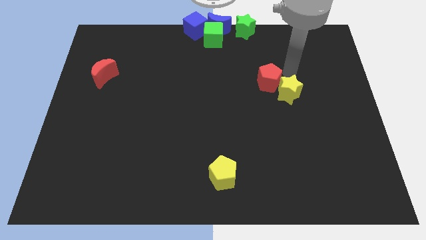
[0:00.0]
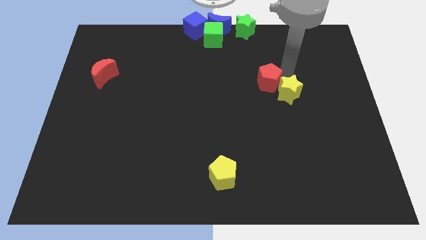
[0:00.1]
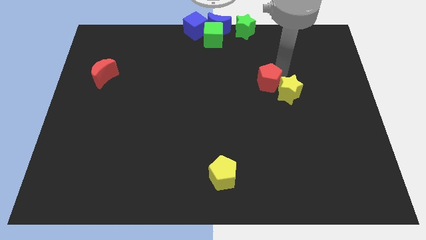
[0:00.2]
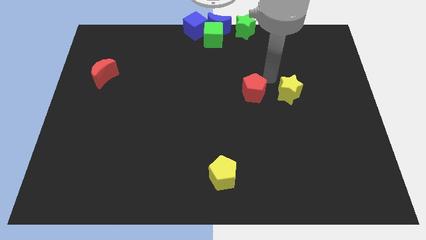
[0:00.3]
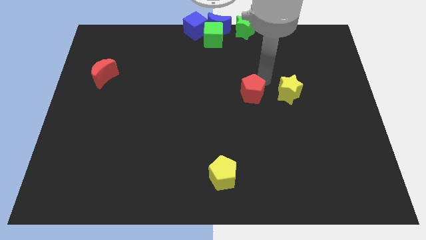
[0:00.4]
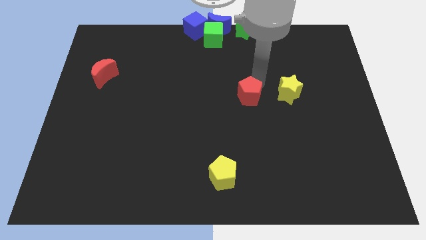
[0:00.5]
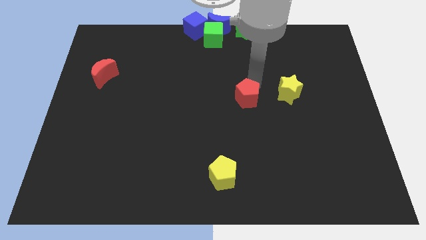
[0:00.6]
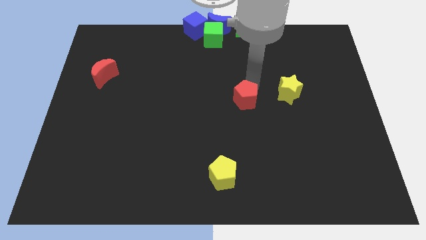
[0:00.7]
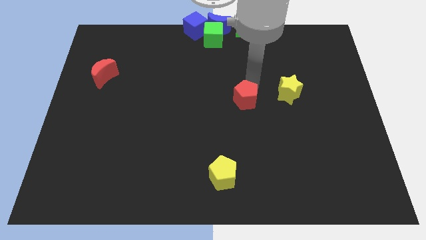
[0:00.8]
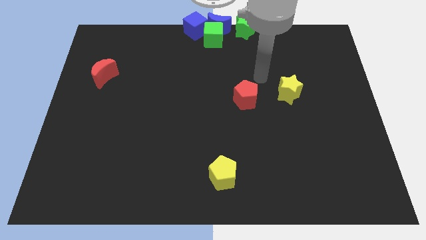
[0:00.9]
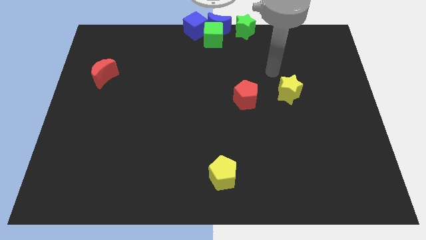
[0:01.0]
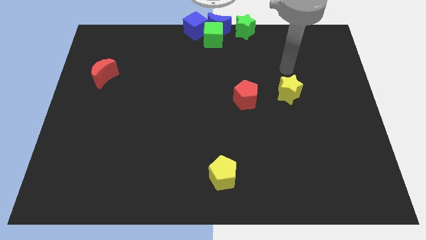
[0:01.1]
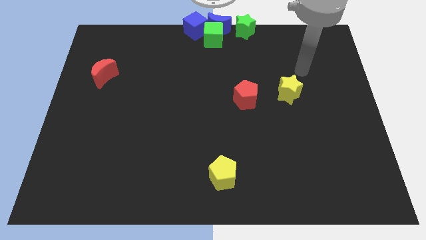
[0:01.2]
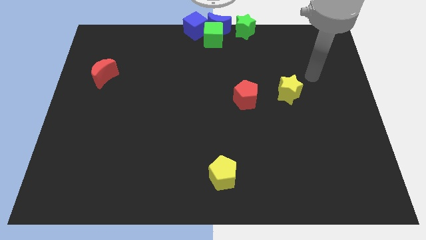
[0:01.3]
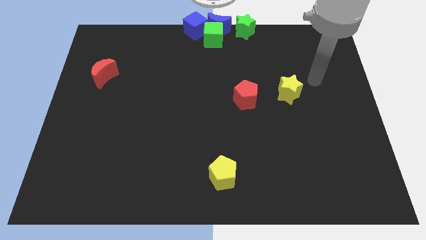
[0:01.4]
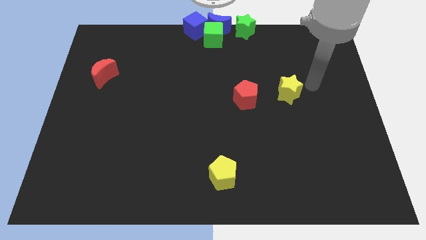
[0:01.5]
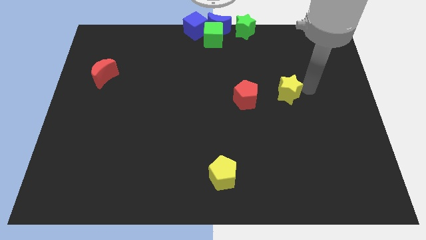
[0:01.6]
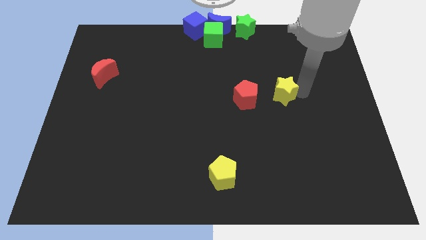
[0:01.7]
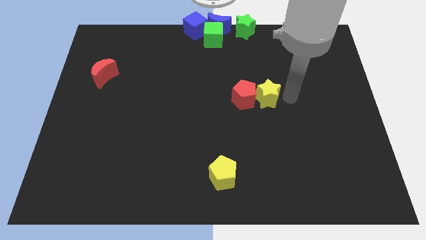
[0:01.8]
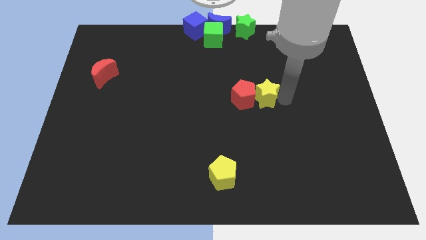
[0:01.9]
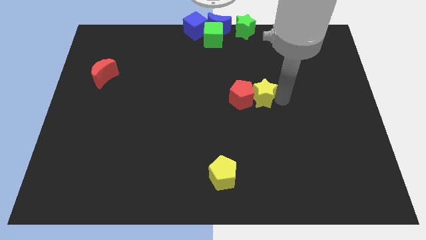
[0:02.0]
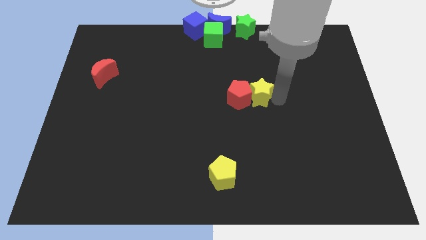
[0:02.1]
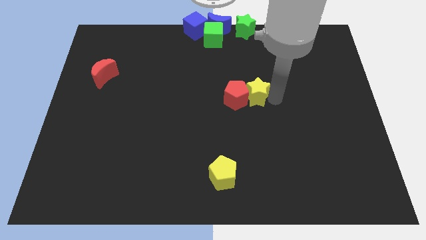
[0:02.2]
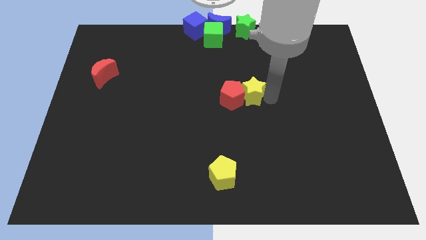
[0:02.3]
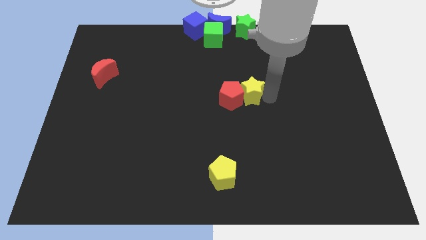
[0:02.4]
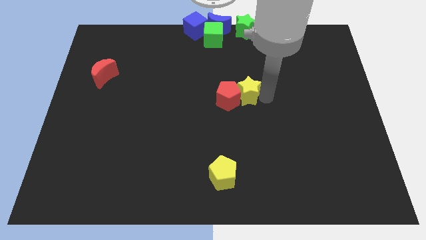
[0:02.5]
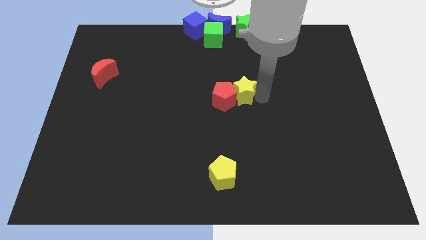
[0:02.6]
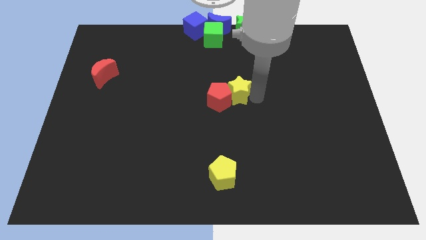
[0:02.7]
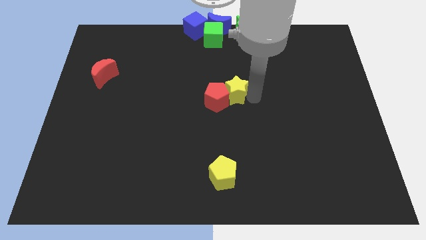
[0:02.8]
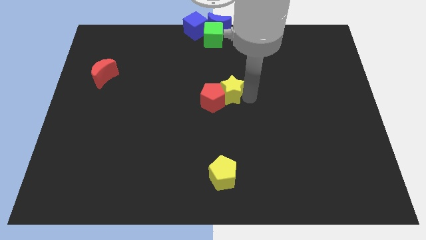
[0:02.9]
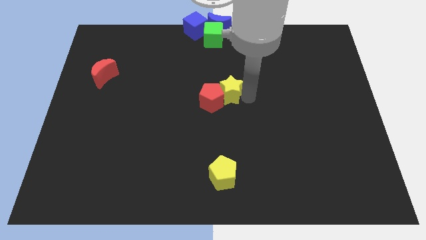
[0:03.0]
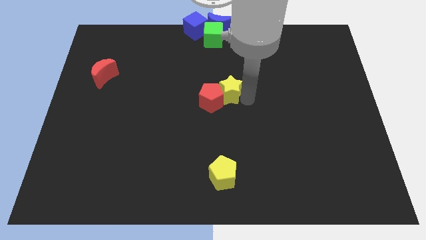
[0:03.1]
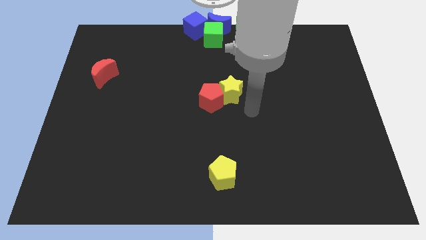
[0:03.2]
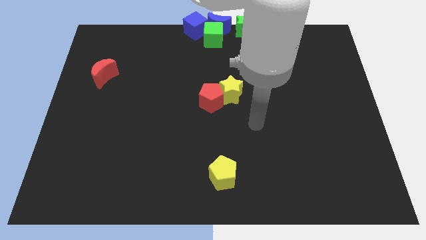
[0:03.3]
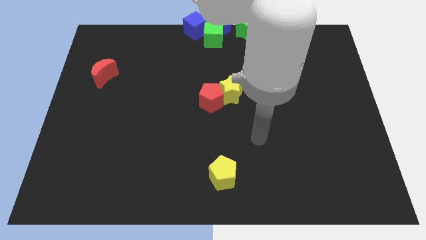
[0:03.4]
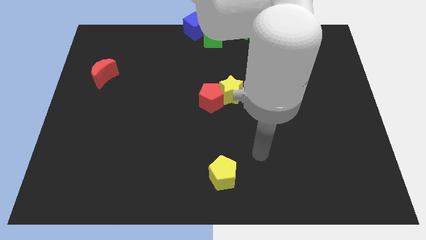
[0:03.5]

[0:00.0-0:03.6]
place the red pentagon and yellow star at the center of the board

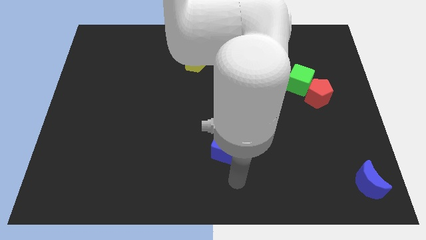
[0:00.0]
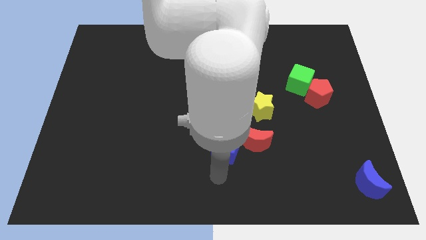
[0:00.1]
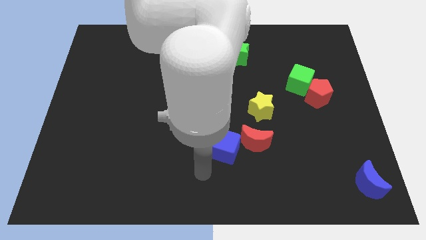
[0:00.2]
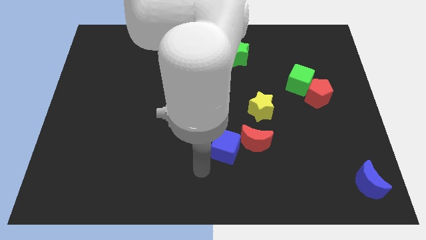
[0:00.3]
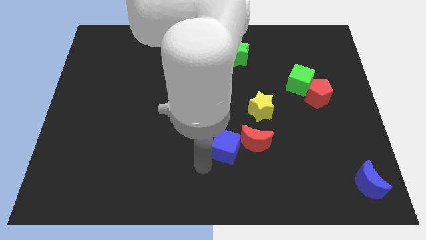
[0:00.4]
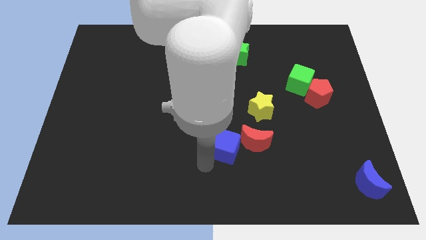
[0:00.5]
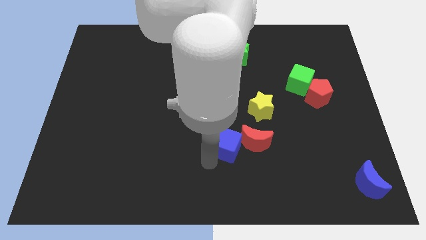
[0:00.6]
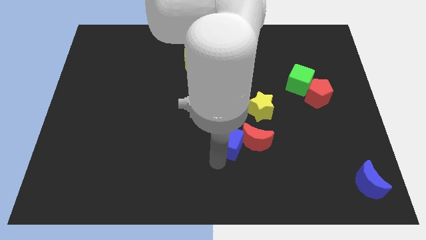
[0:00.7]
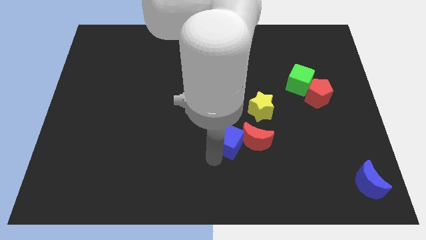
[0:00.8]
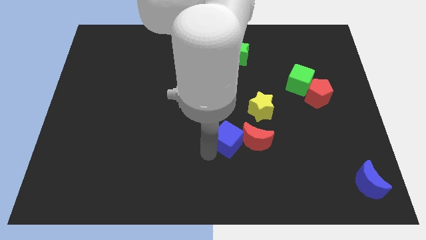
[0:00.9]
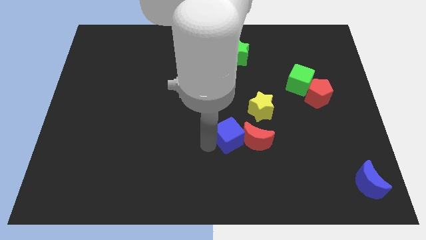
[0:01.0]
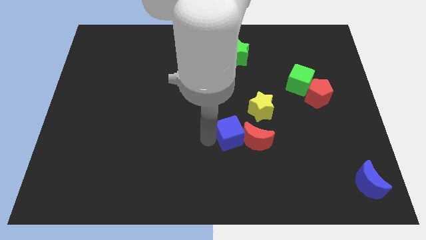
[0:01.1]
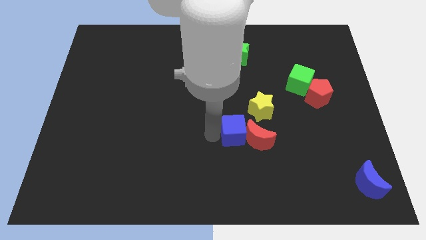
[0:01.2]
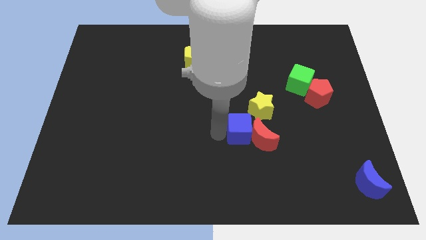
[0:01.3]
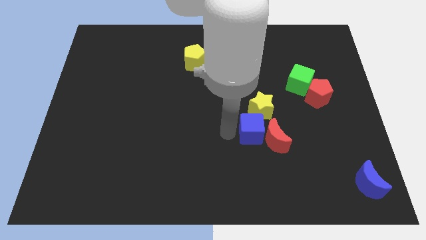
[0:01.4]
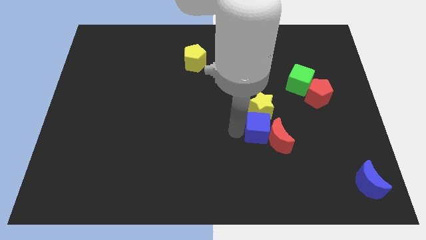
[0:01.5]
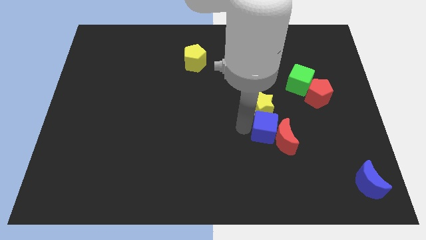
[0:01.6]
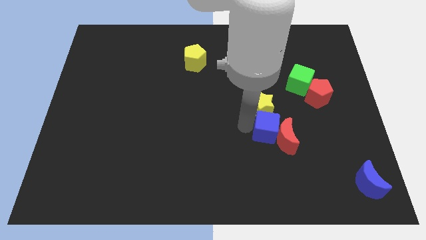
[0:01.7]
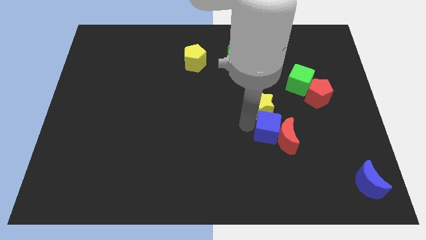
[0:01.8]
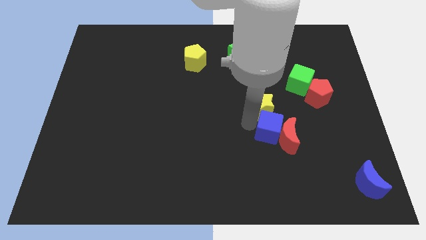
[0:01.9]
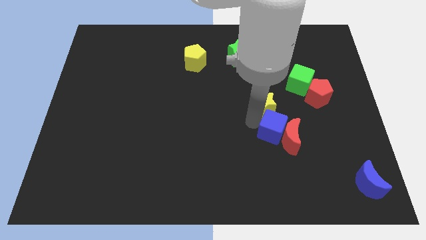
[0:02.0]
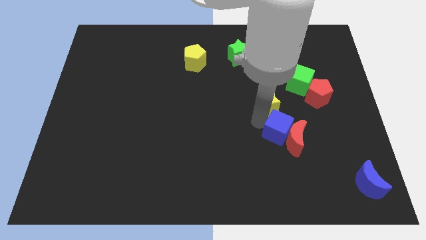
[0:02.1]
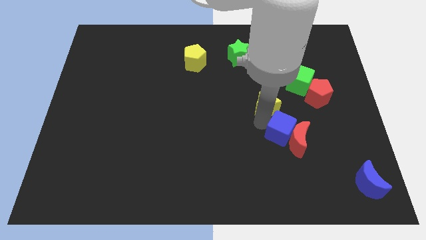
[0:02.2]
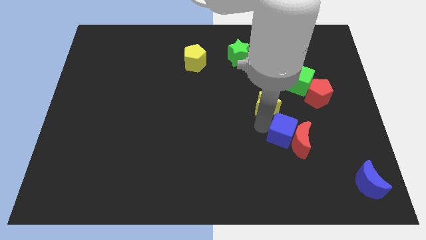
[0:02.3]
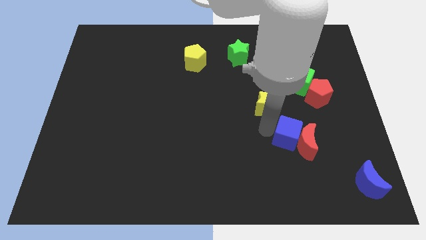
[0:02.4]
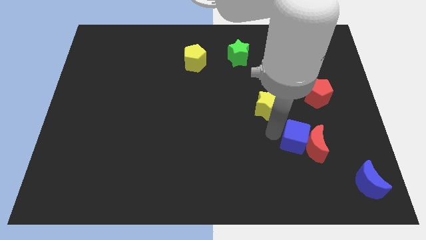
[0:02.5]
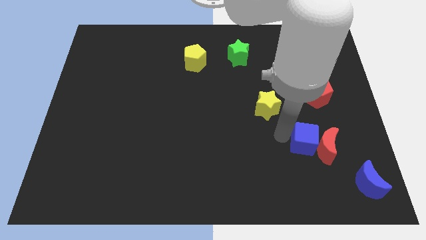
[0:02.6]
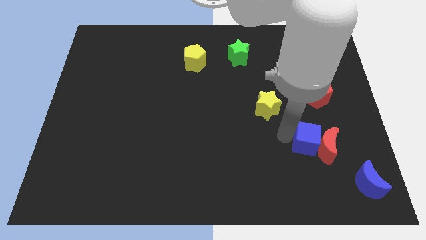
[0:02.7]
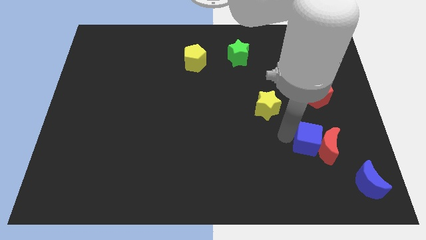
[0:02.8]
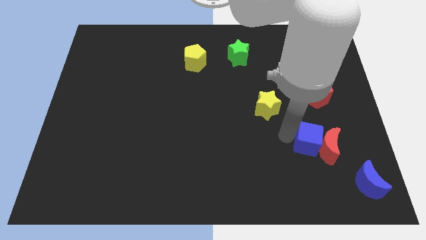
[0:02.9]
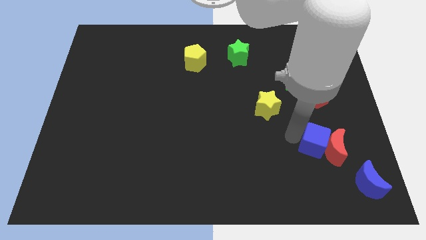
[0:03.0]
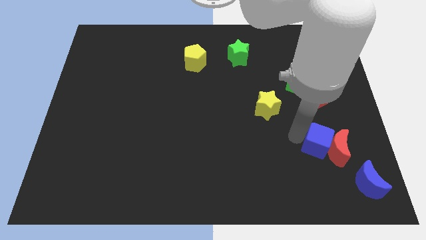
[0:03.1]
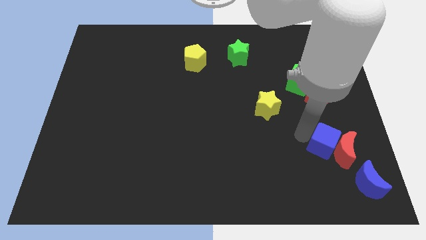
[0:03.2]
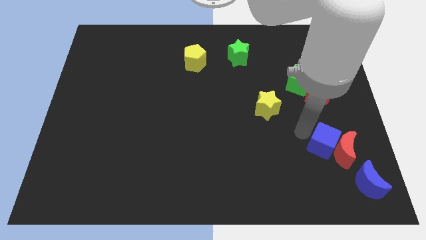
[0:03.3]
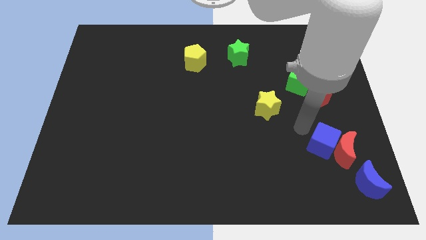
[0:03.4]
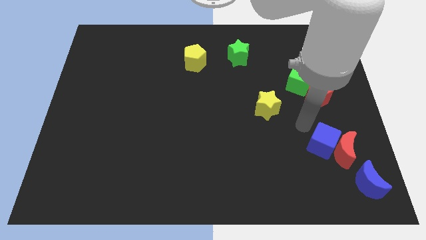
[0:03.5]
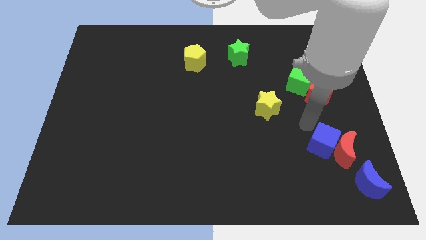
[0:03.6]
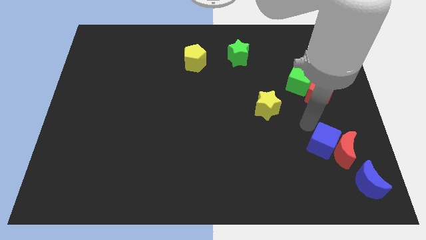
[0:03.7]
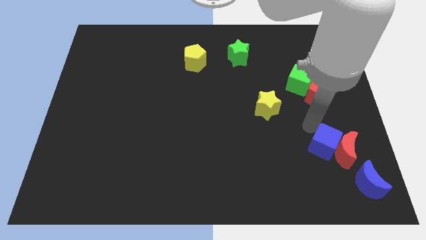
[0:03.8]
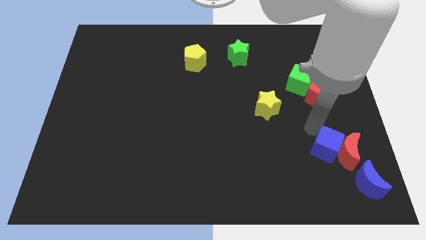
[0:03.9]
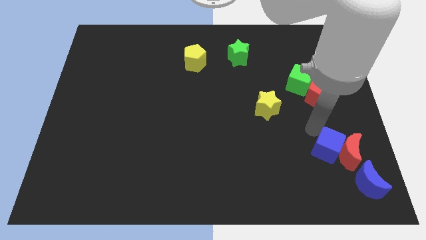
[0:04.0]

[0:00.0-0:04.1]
push blue cube along with red moon towards blue moon

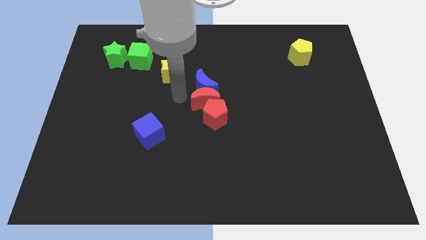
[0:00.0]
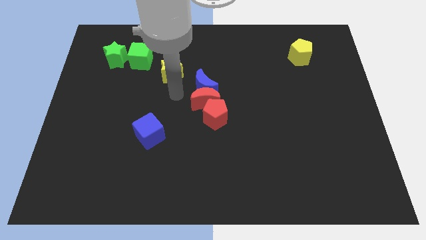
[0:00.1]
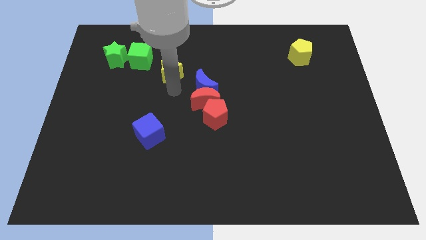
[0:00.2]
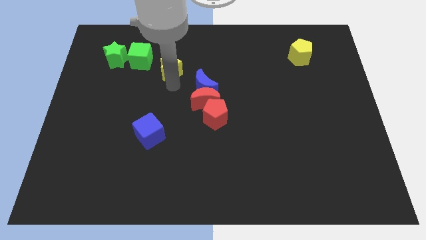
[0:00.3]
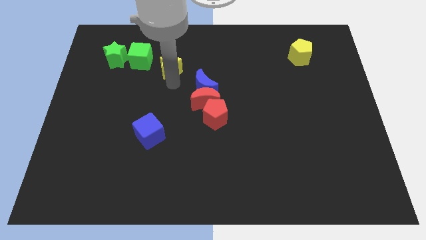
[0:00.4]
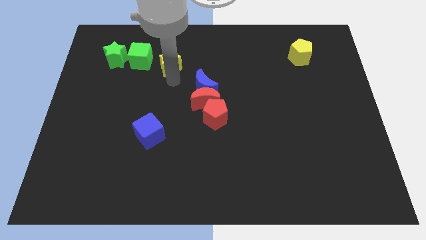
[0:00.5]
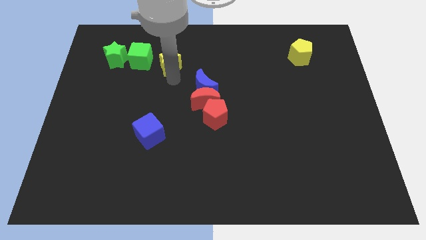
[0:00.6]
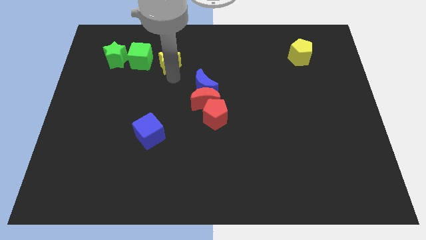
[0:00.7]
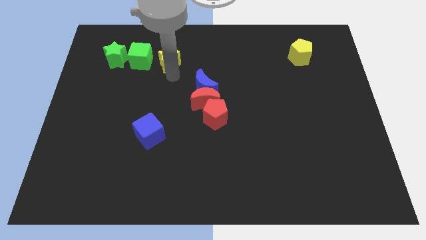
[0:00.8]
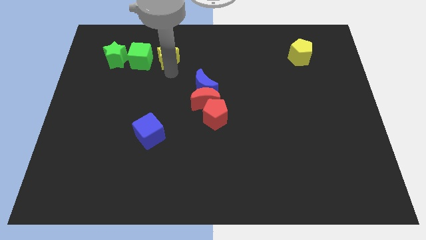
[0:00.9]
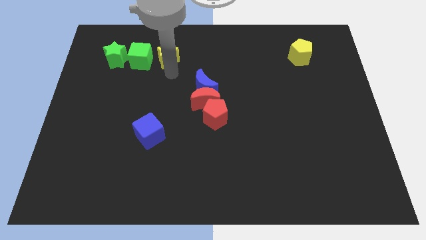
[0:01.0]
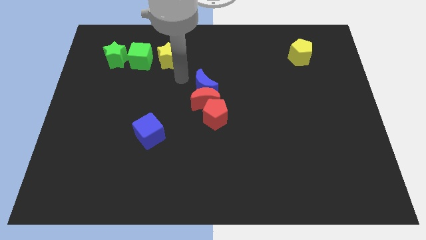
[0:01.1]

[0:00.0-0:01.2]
put the yellow star parallel to green cube
